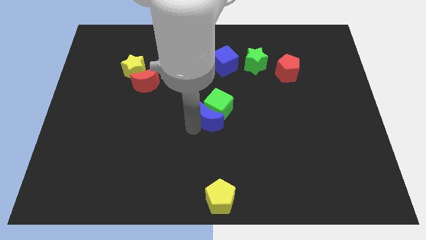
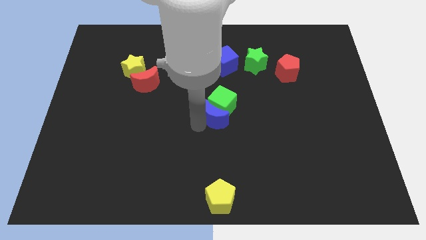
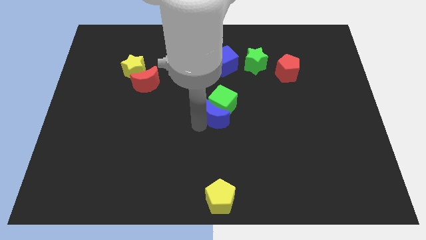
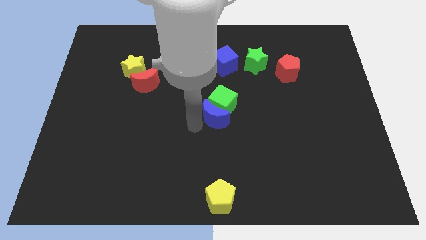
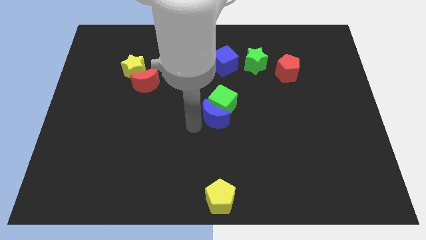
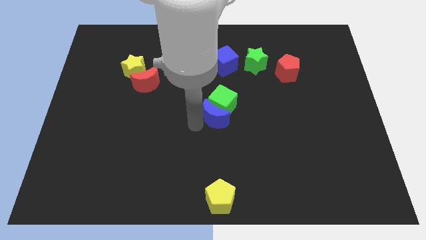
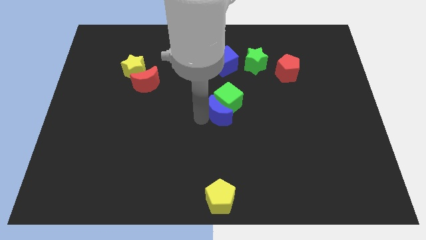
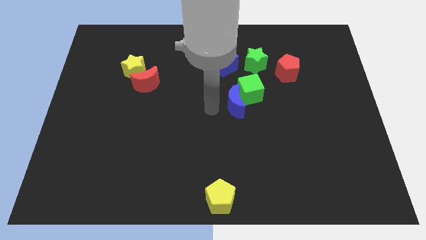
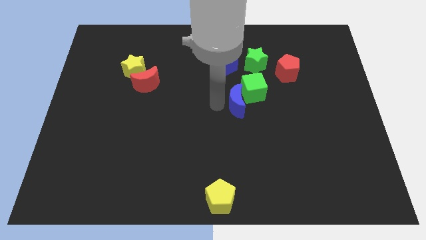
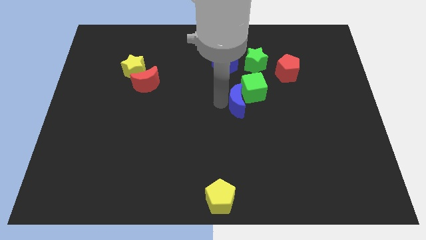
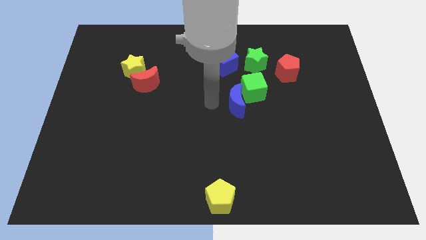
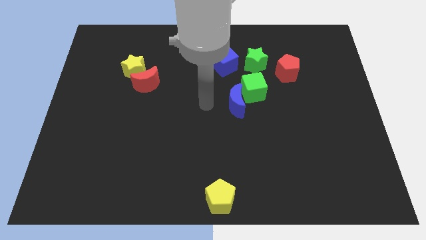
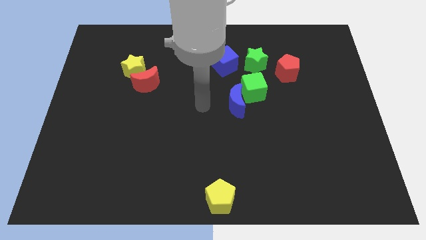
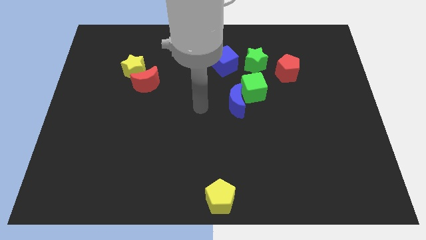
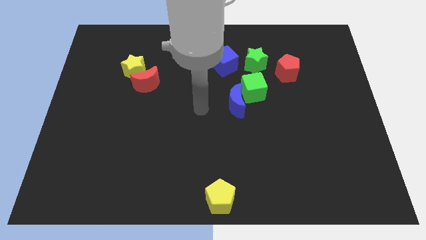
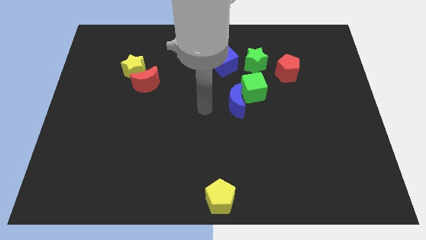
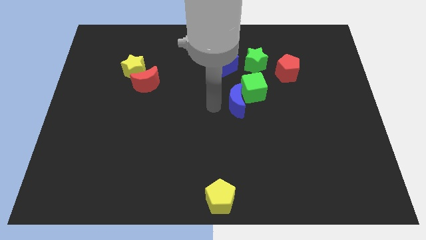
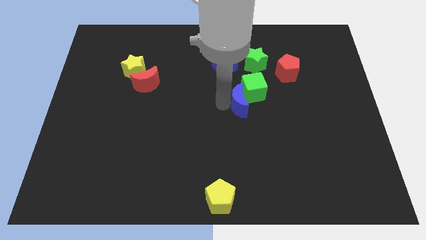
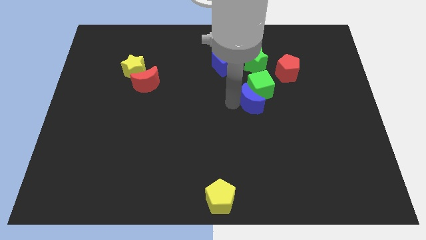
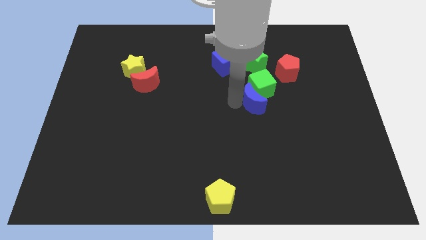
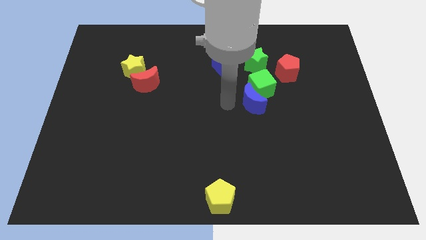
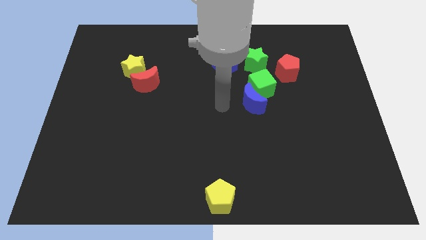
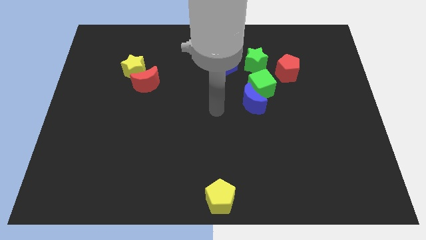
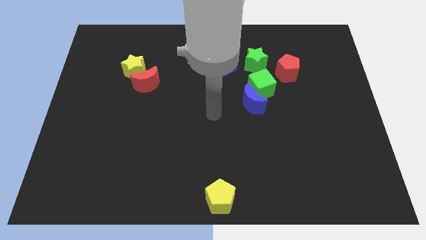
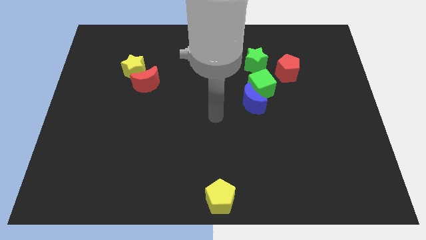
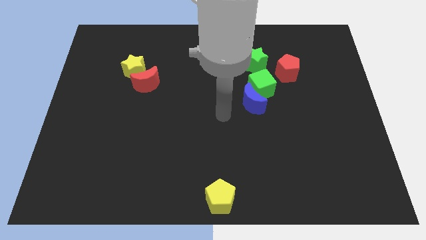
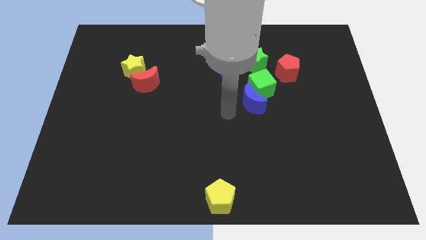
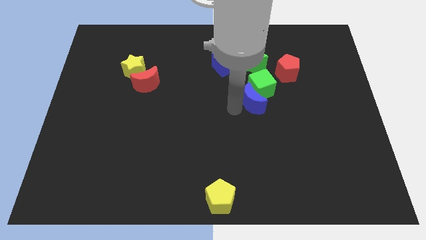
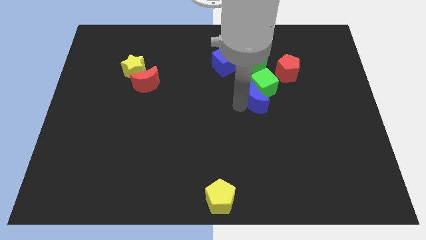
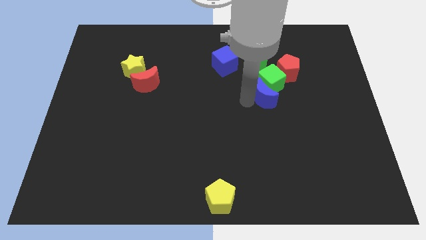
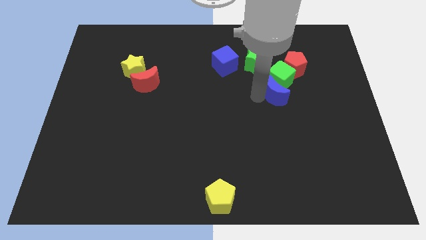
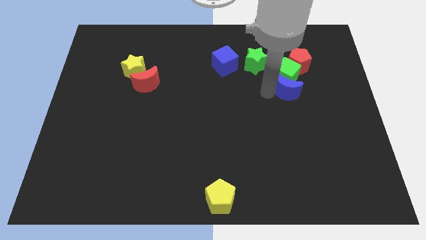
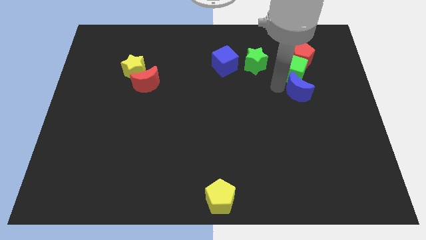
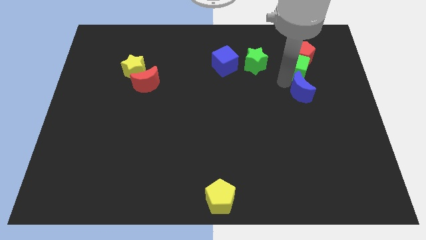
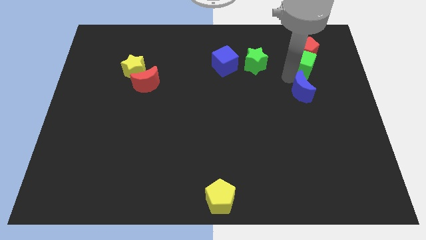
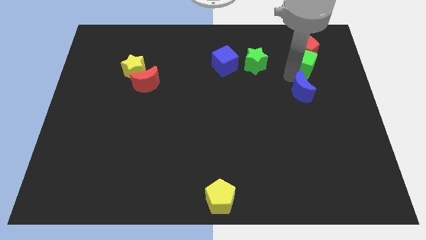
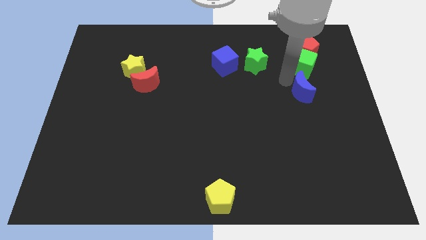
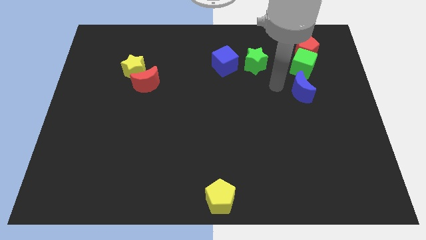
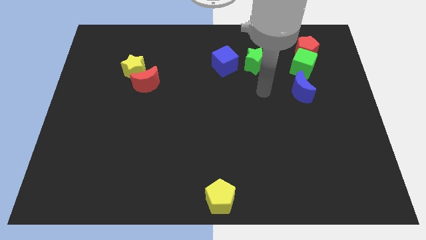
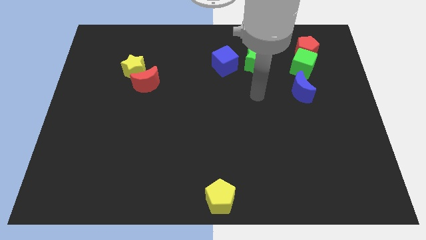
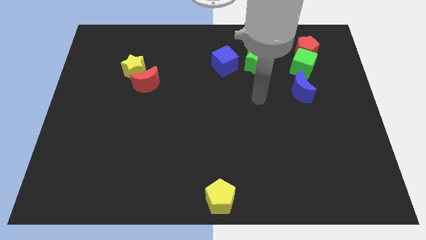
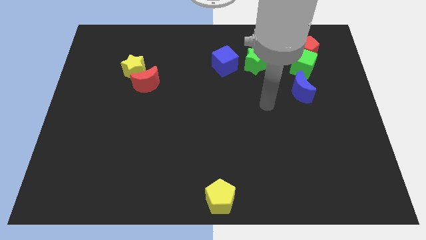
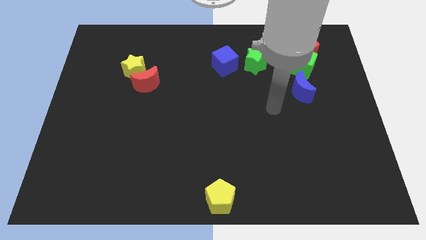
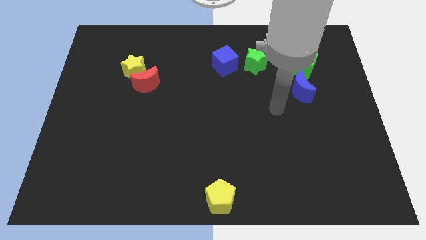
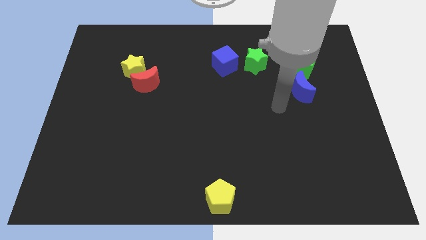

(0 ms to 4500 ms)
push the green cube and blue moon into the red pentagon

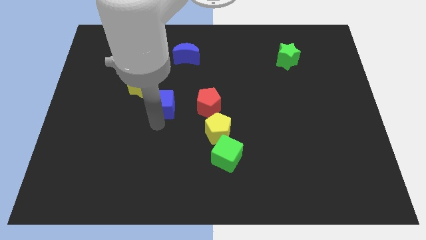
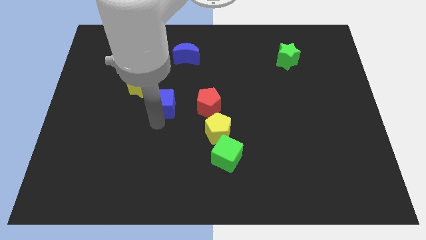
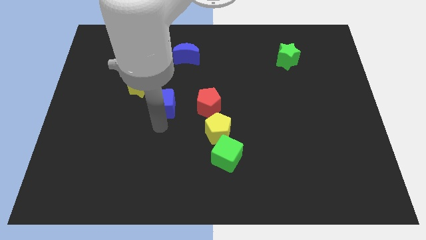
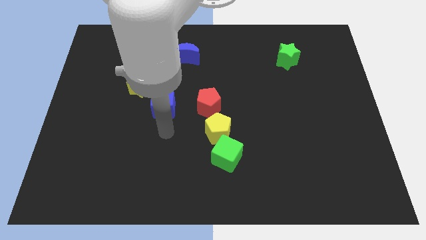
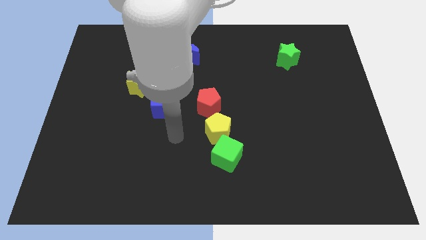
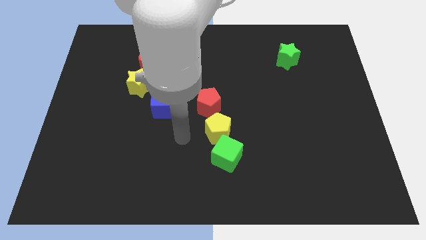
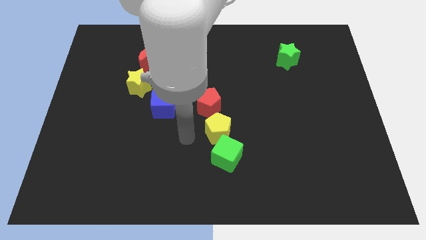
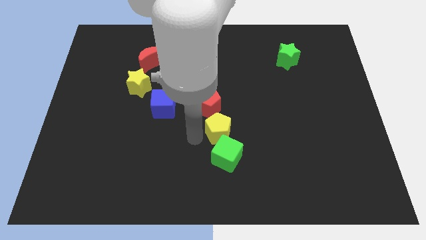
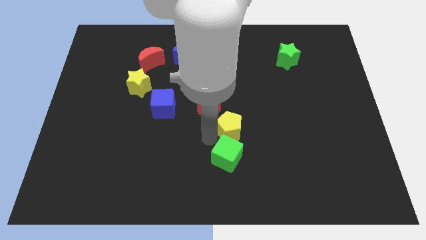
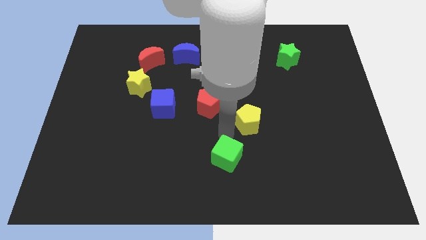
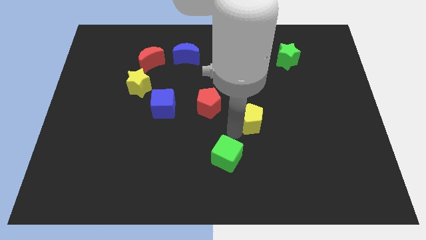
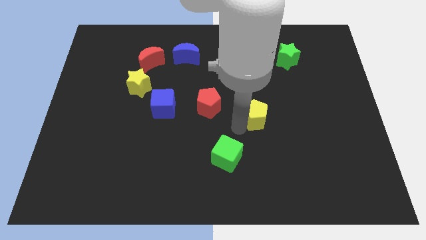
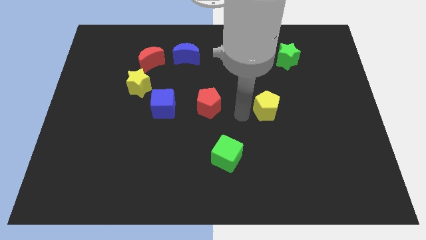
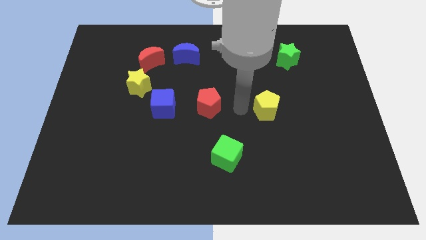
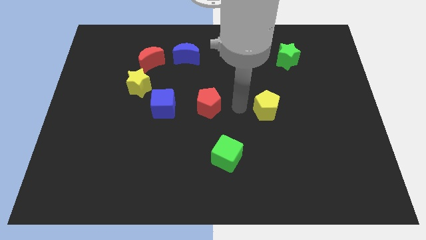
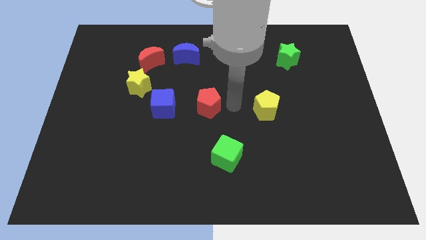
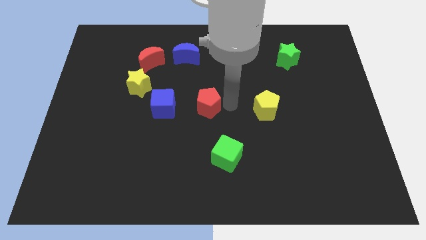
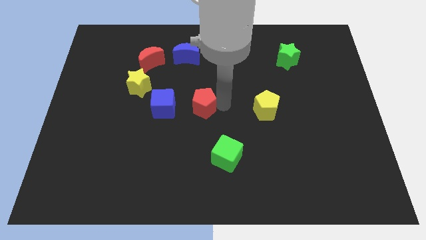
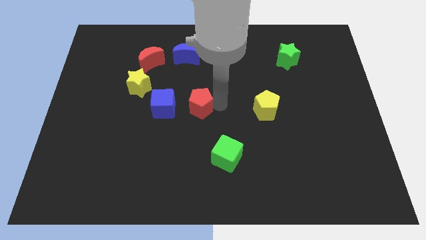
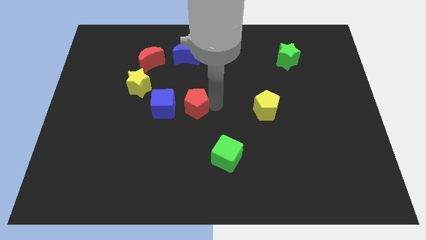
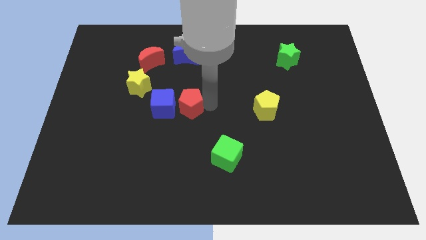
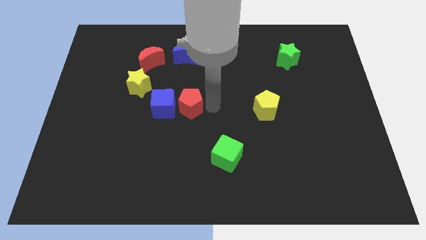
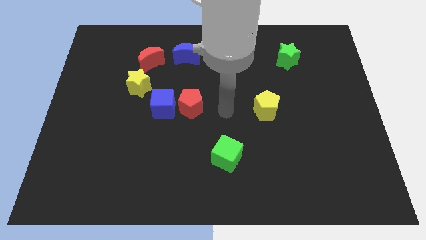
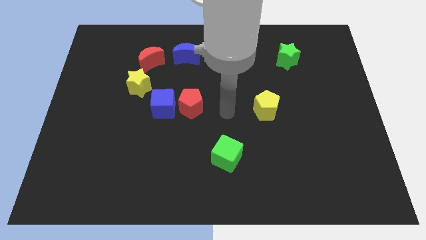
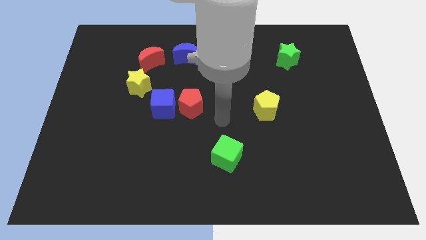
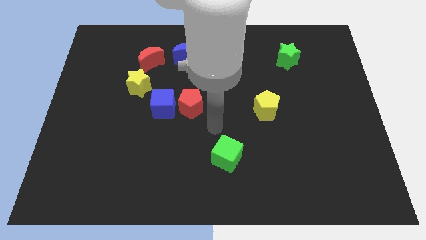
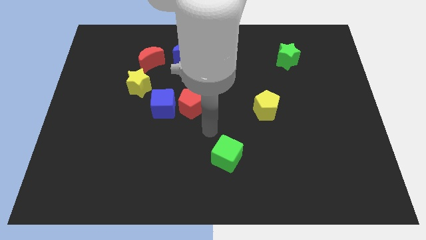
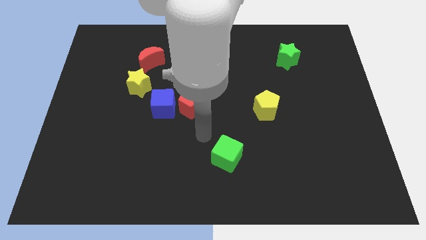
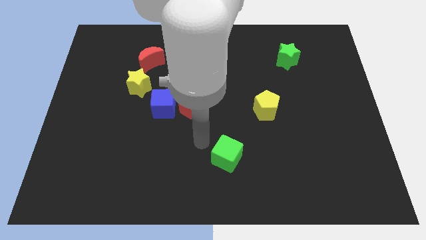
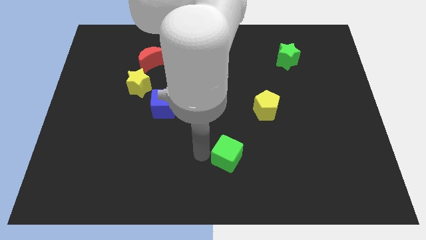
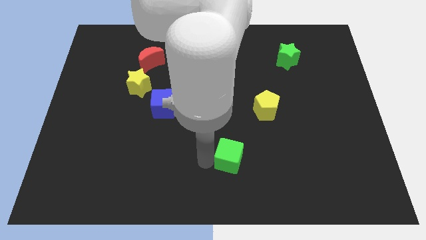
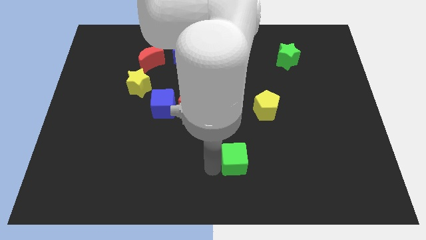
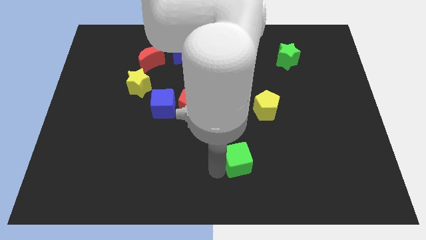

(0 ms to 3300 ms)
place the yellow pentagon to the right of red pentagon

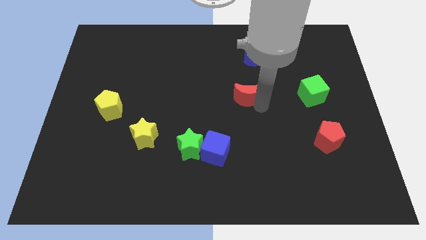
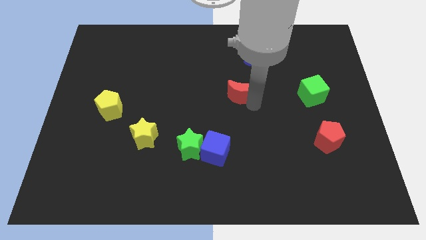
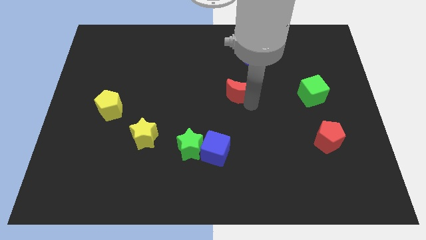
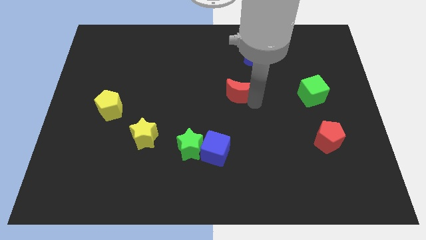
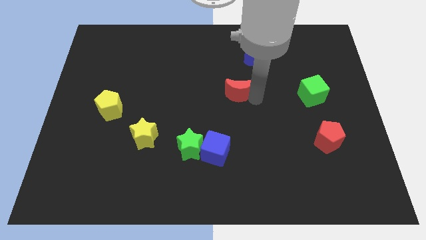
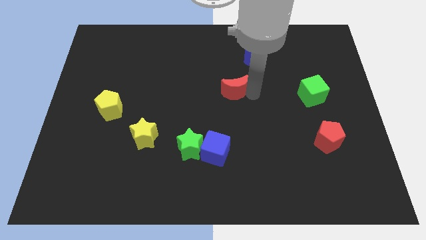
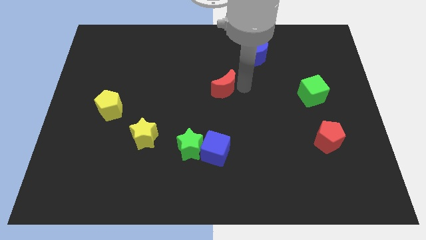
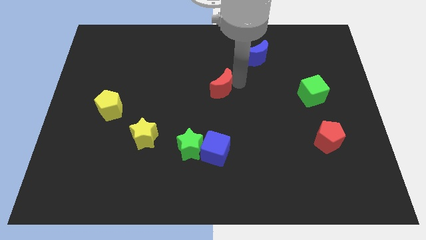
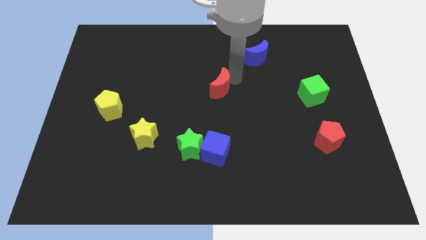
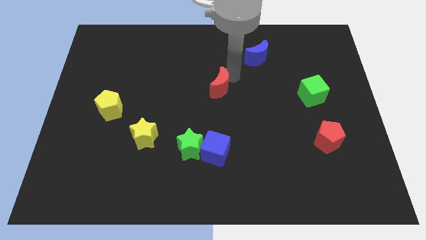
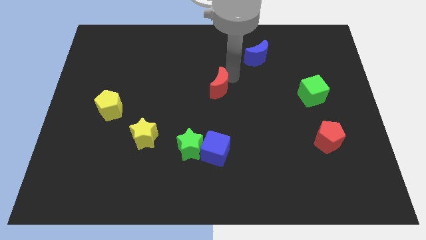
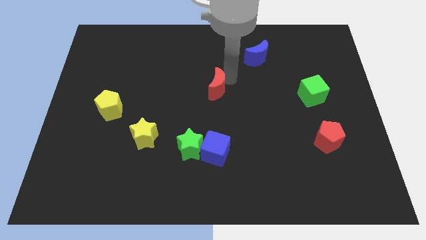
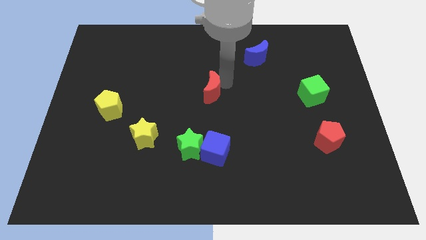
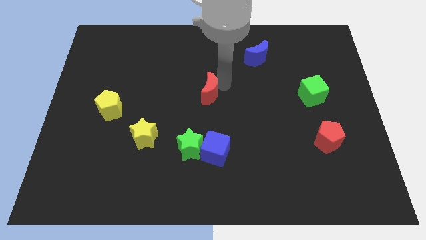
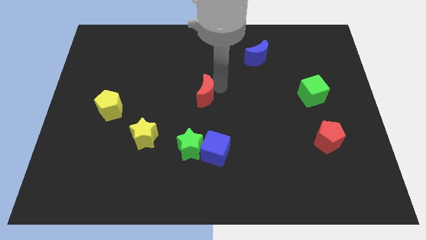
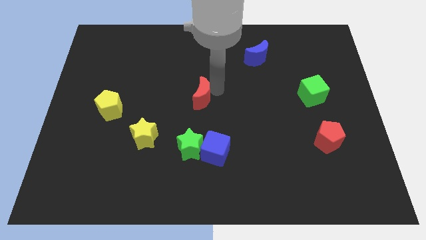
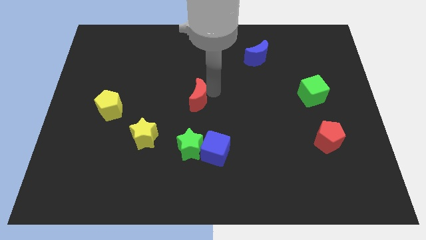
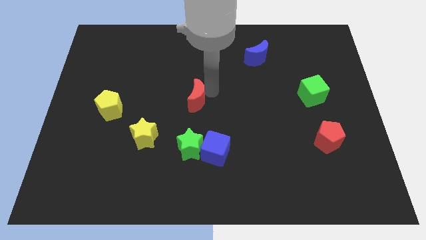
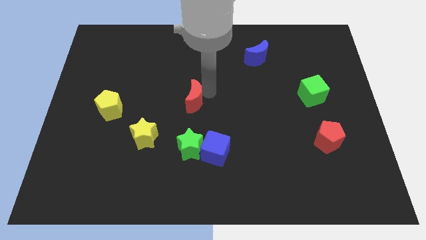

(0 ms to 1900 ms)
place the red moon diagonal to the yellow star
